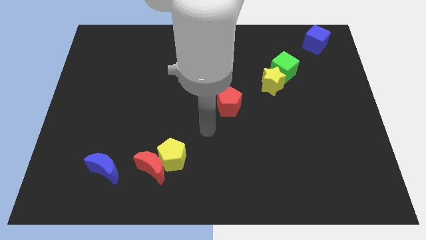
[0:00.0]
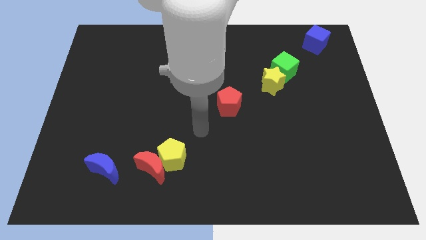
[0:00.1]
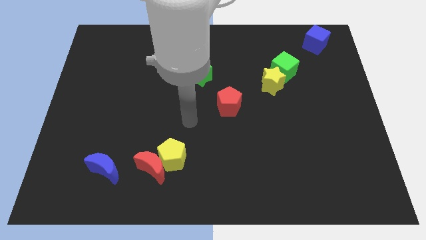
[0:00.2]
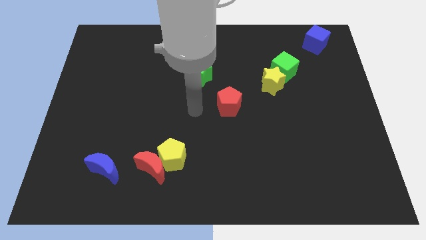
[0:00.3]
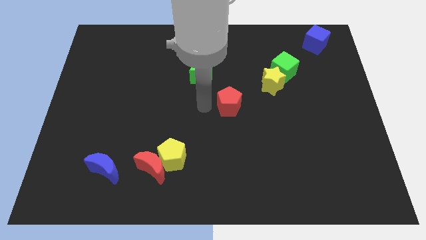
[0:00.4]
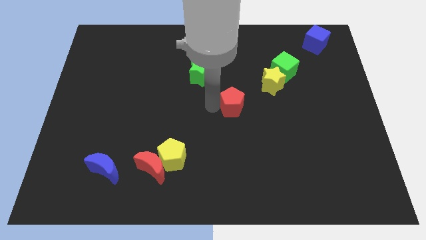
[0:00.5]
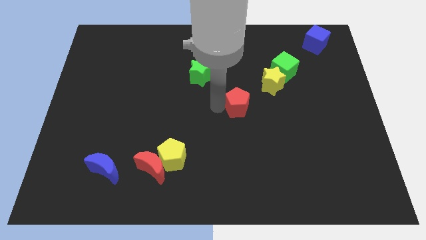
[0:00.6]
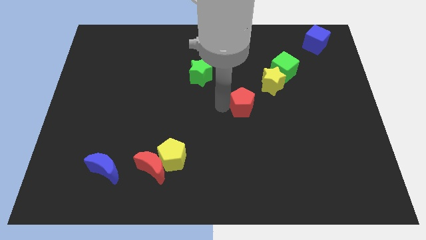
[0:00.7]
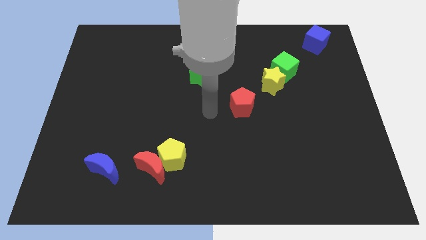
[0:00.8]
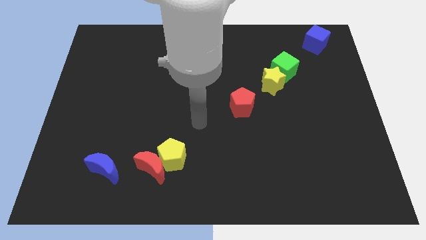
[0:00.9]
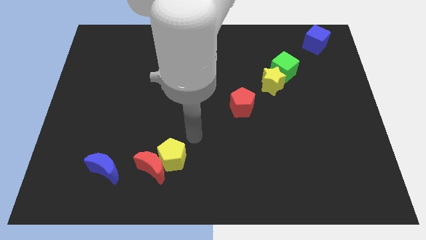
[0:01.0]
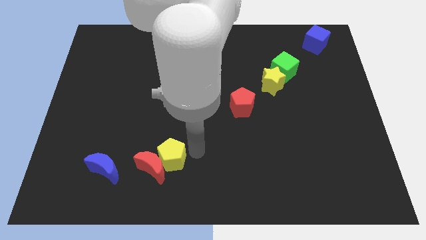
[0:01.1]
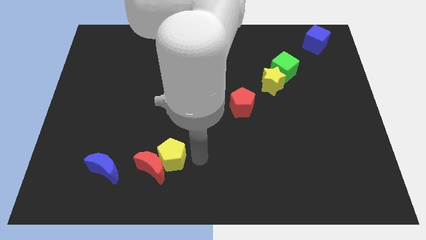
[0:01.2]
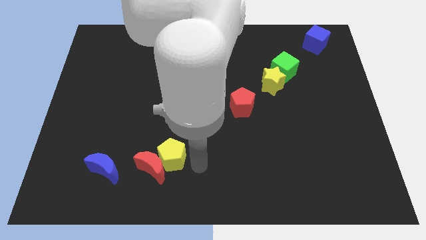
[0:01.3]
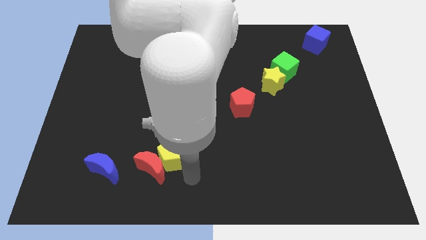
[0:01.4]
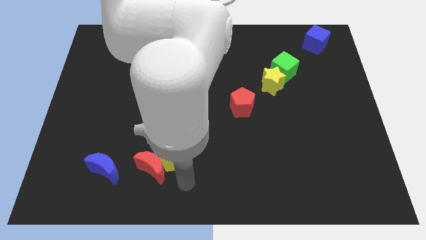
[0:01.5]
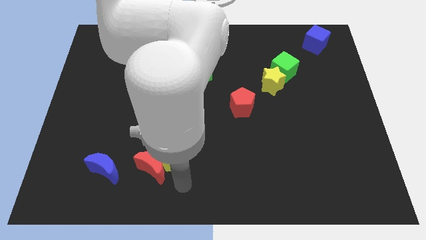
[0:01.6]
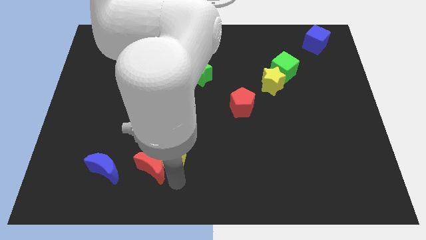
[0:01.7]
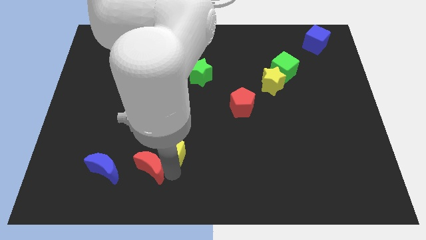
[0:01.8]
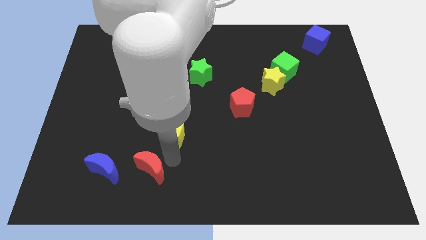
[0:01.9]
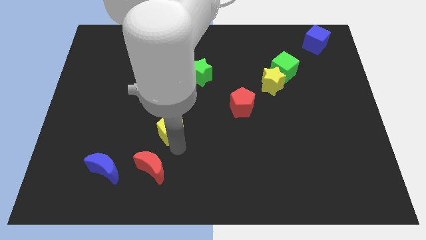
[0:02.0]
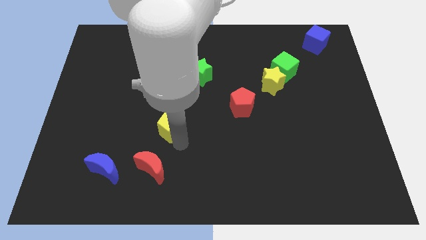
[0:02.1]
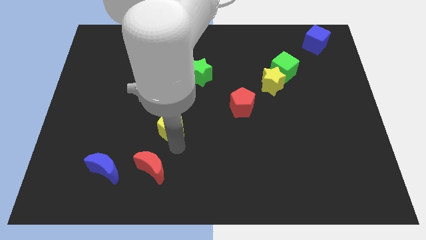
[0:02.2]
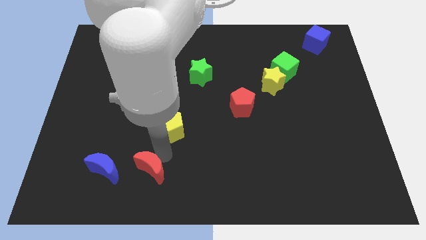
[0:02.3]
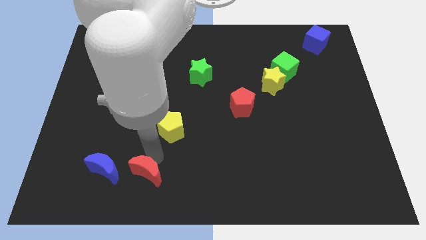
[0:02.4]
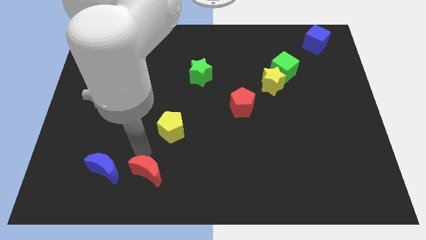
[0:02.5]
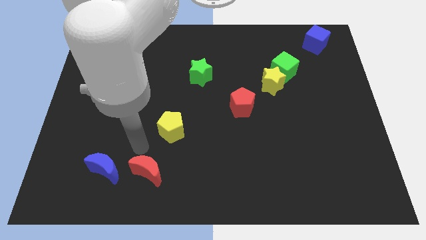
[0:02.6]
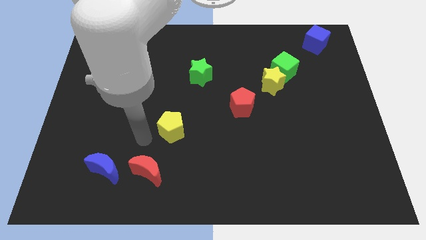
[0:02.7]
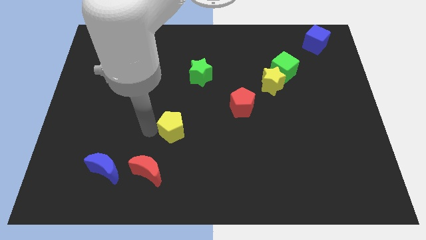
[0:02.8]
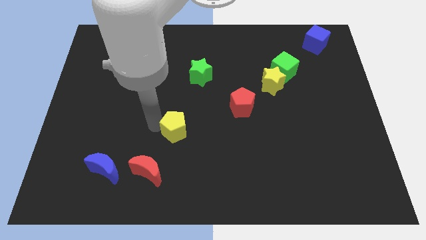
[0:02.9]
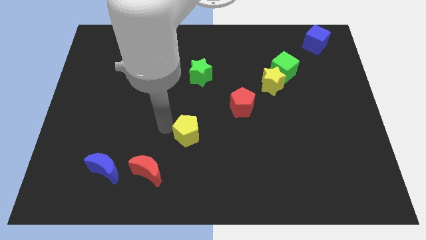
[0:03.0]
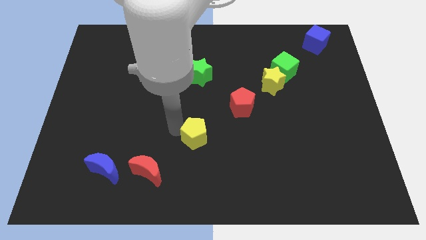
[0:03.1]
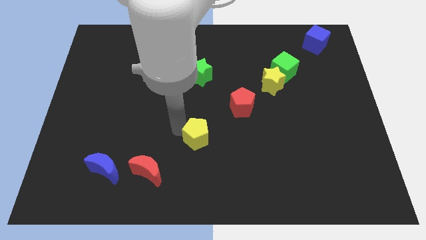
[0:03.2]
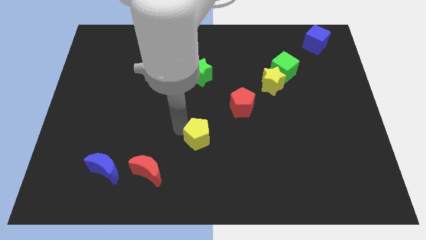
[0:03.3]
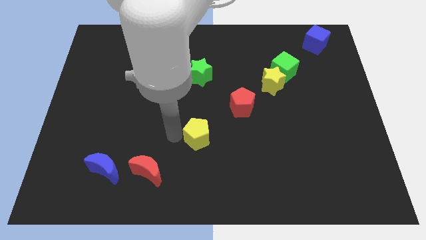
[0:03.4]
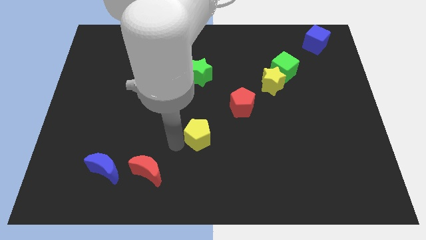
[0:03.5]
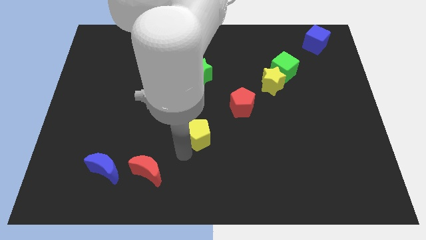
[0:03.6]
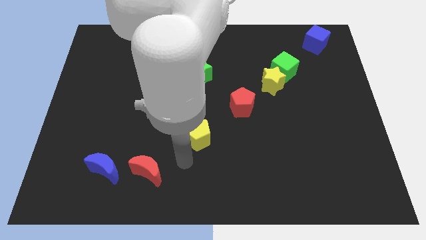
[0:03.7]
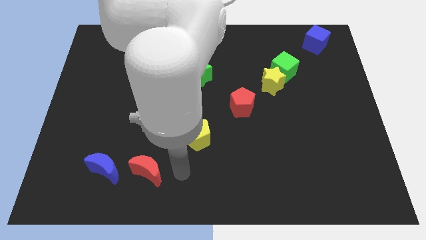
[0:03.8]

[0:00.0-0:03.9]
place yellow pentagon in the line of blocks

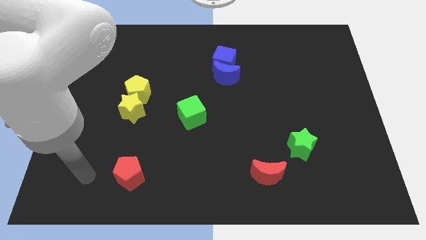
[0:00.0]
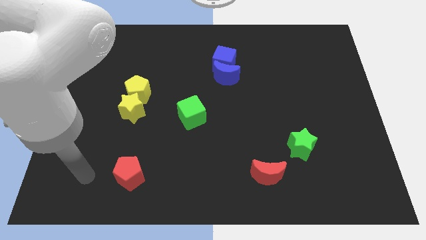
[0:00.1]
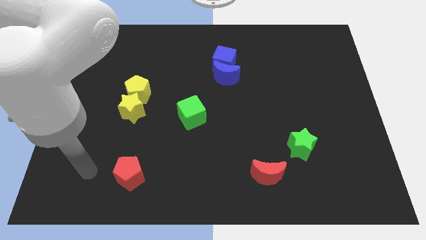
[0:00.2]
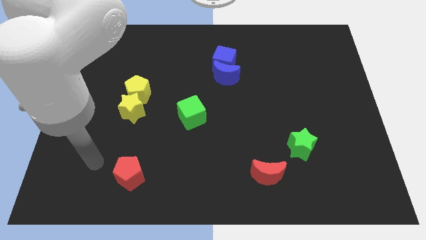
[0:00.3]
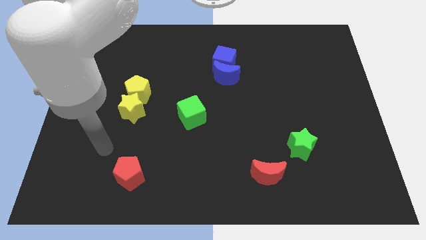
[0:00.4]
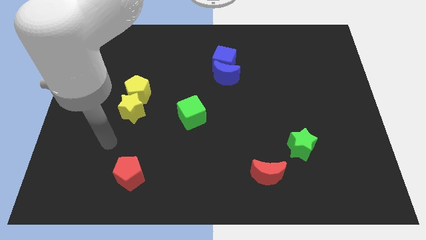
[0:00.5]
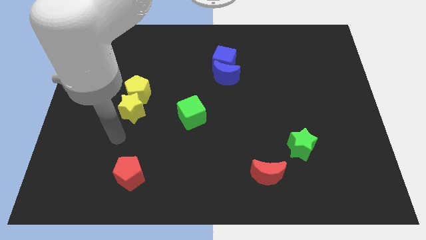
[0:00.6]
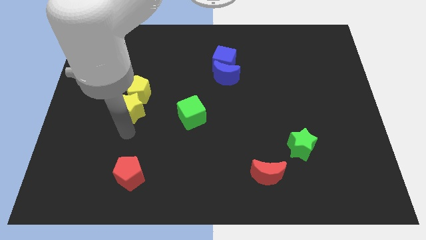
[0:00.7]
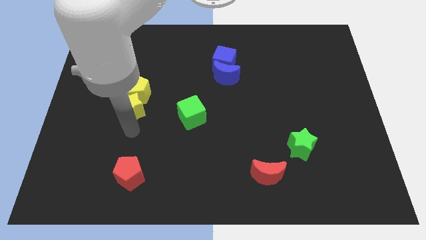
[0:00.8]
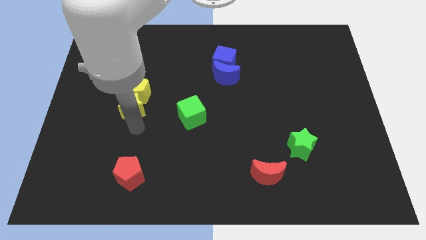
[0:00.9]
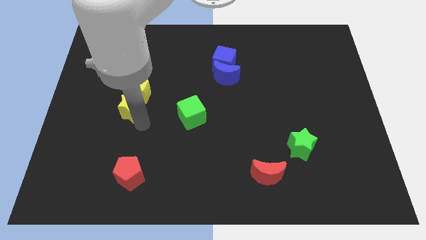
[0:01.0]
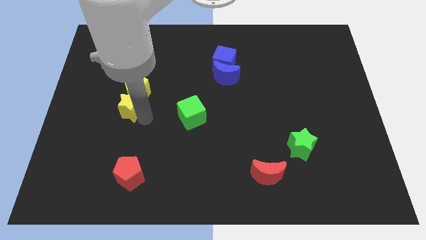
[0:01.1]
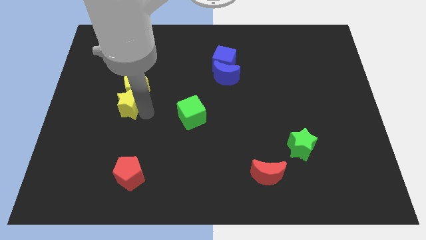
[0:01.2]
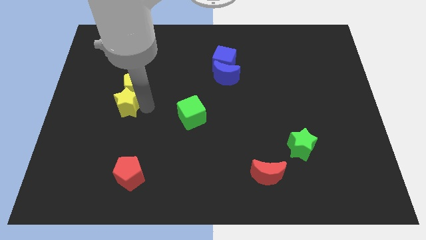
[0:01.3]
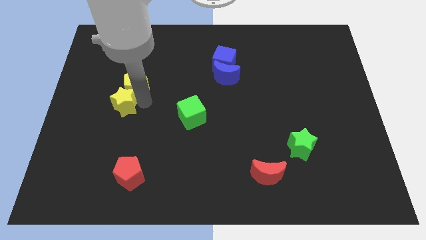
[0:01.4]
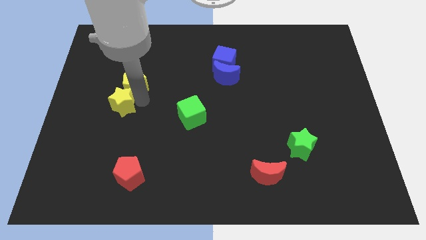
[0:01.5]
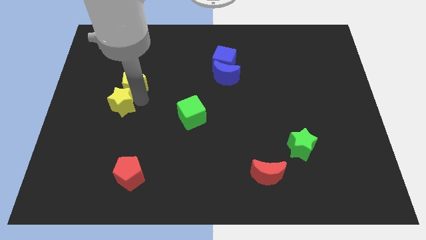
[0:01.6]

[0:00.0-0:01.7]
slightly push the yellow star

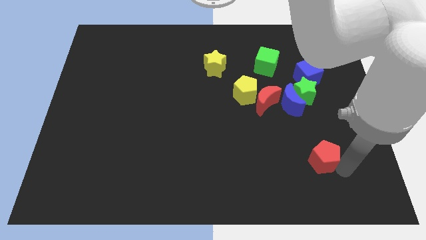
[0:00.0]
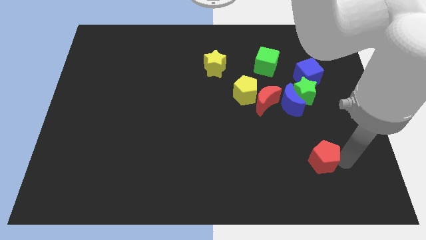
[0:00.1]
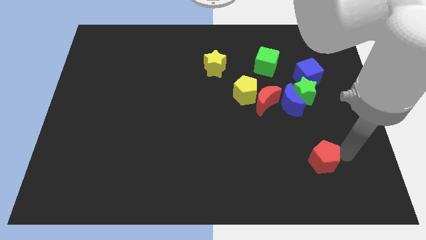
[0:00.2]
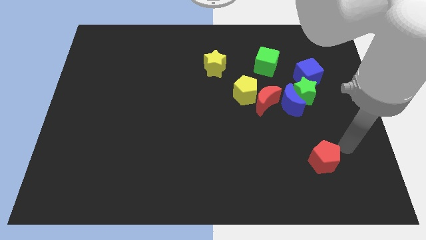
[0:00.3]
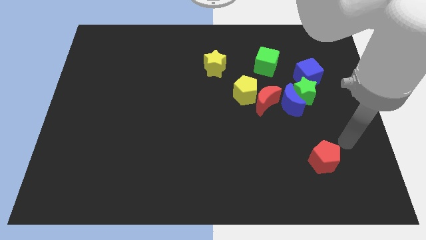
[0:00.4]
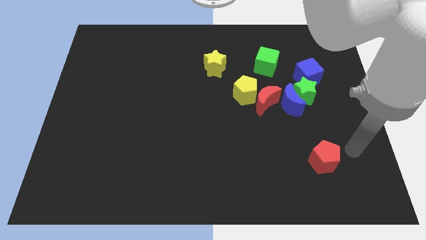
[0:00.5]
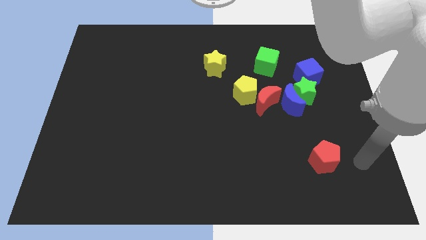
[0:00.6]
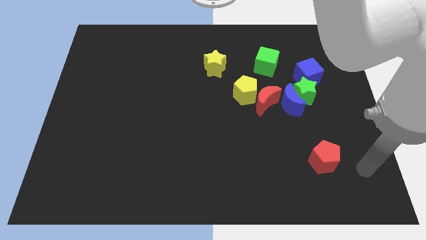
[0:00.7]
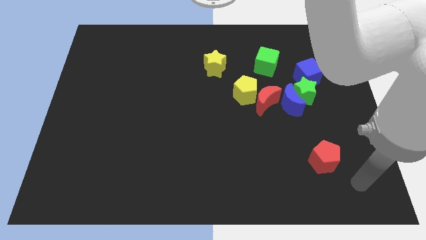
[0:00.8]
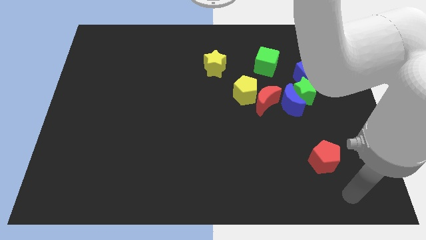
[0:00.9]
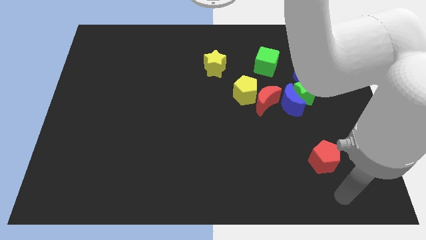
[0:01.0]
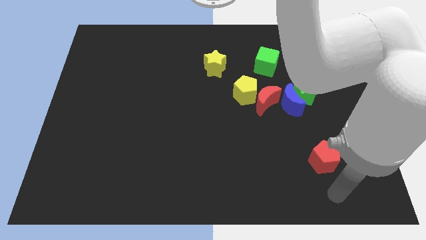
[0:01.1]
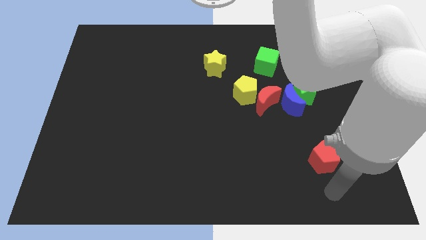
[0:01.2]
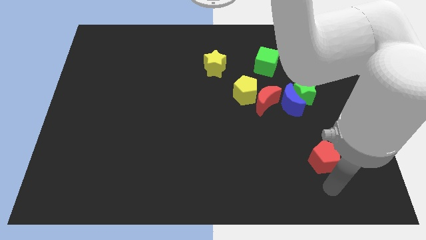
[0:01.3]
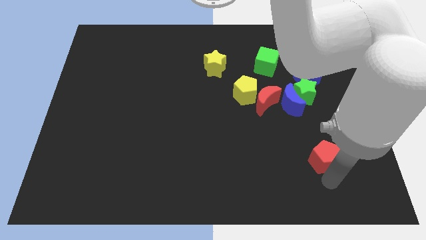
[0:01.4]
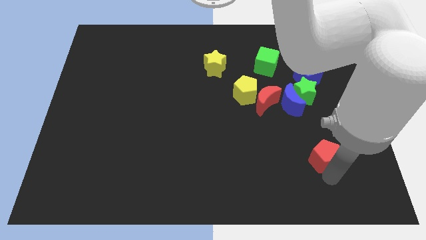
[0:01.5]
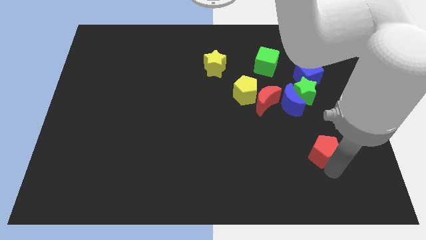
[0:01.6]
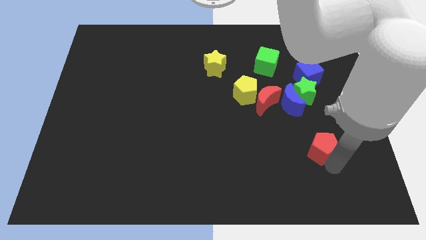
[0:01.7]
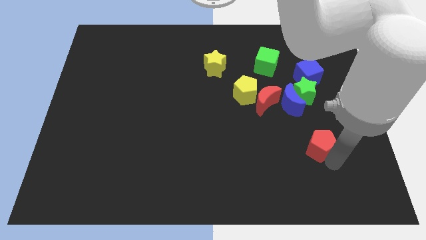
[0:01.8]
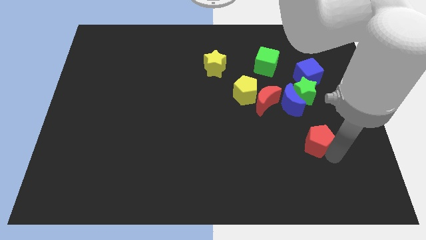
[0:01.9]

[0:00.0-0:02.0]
push the red pentagon up slightly

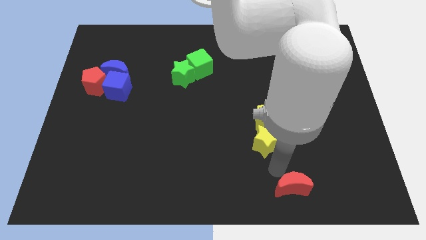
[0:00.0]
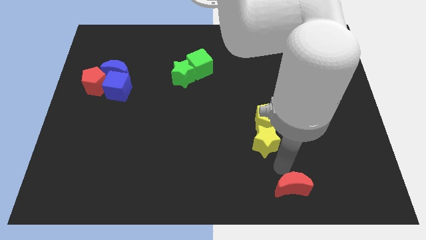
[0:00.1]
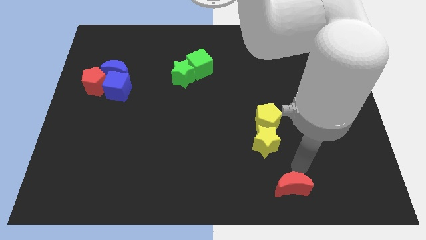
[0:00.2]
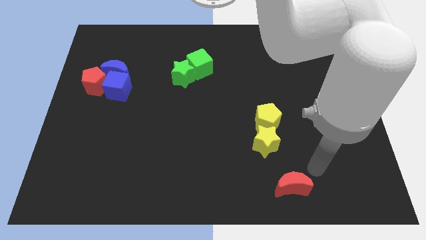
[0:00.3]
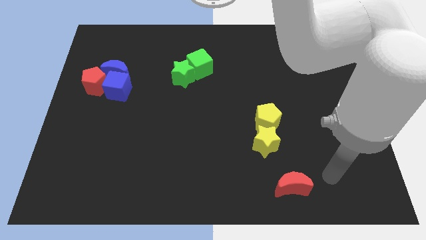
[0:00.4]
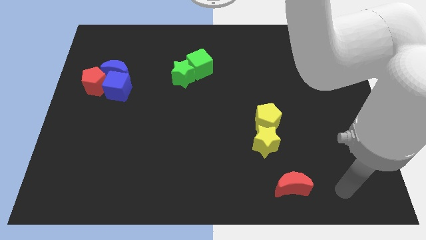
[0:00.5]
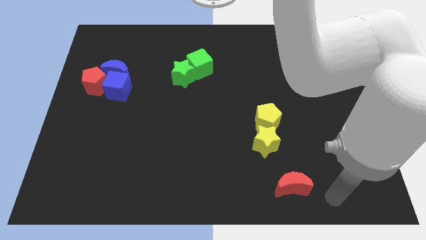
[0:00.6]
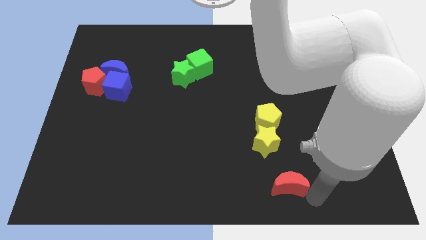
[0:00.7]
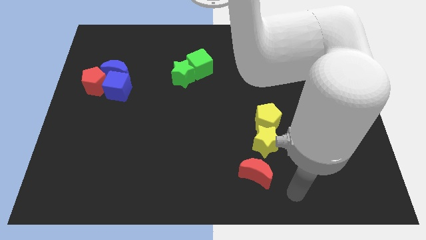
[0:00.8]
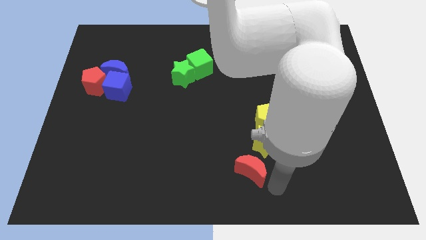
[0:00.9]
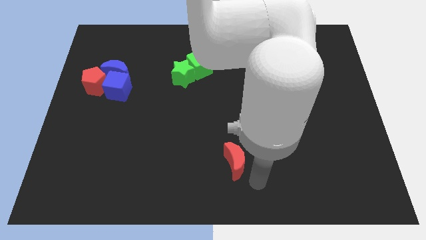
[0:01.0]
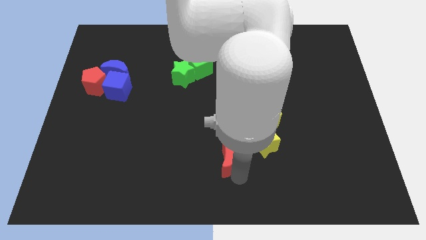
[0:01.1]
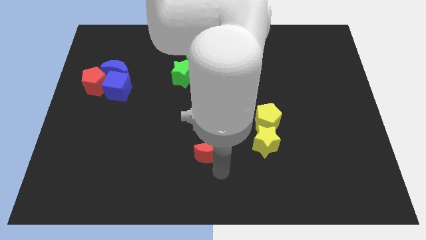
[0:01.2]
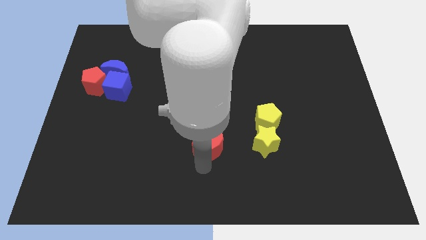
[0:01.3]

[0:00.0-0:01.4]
put the red moon diagonal to the left of yellow star
